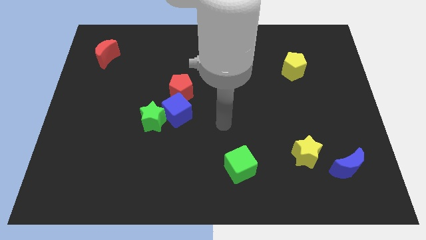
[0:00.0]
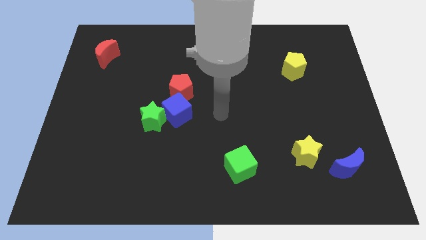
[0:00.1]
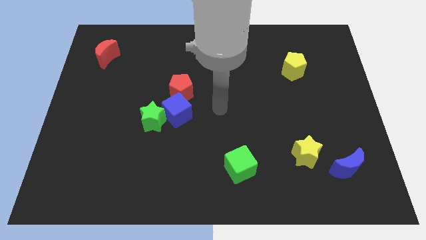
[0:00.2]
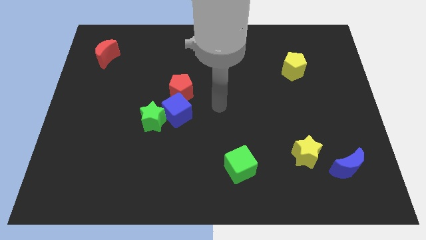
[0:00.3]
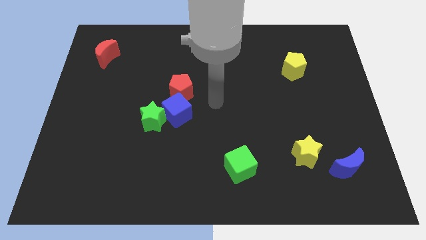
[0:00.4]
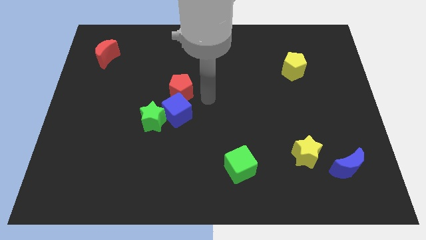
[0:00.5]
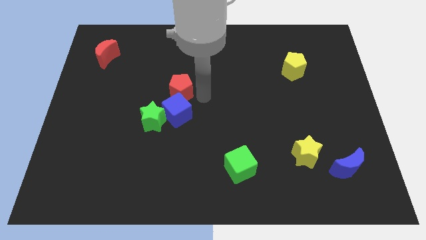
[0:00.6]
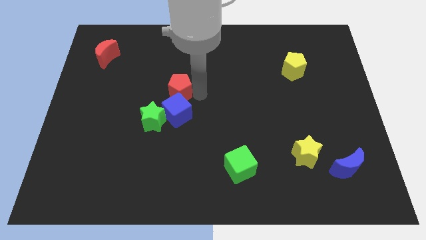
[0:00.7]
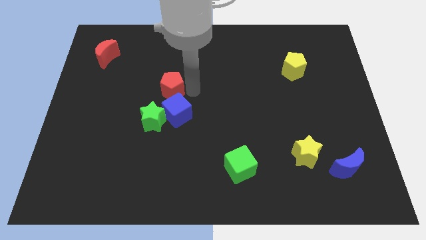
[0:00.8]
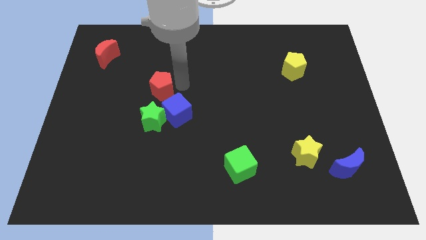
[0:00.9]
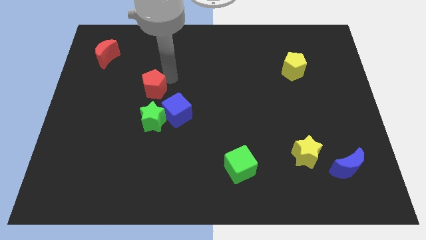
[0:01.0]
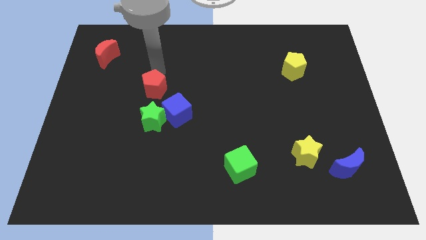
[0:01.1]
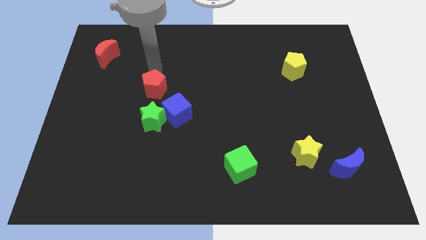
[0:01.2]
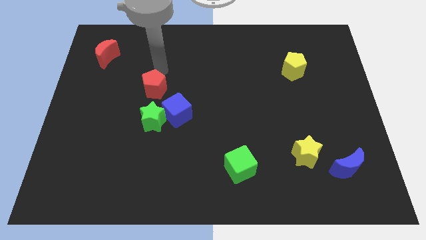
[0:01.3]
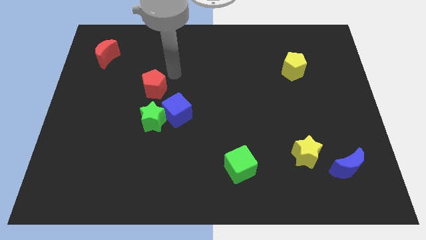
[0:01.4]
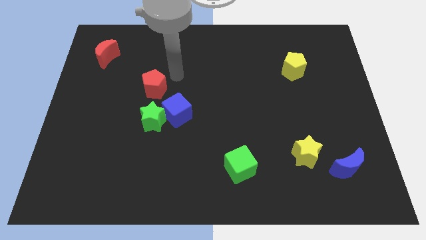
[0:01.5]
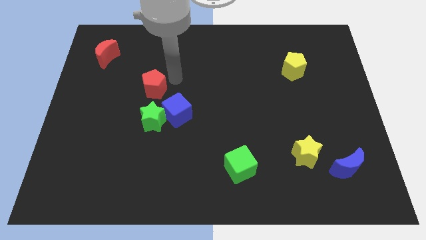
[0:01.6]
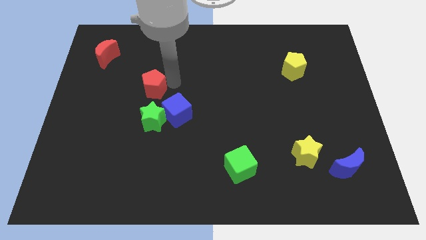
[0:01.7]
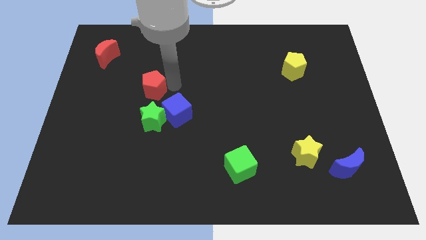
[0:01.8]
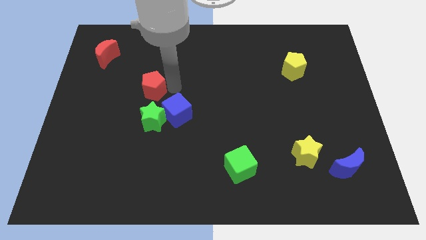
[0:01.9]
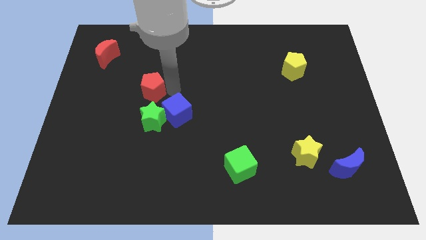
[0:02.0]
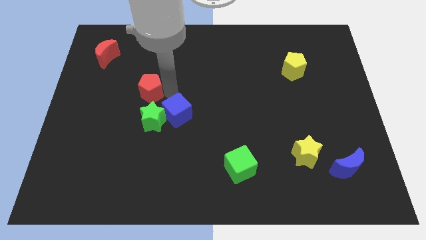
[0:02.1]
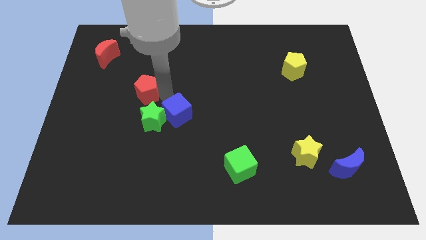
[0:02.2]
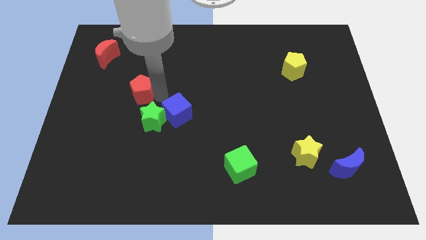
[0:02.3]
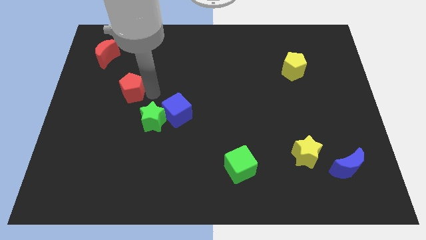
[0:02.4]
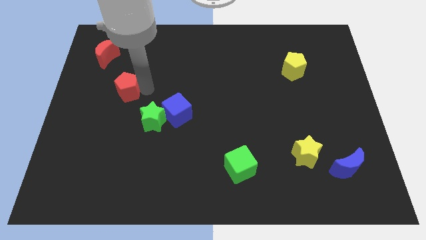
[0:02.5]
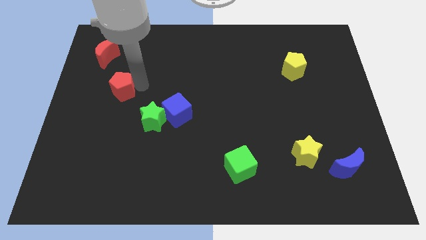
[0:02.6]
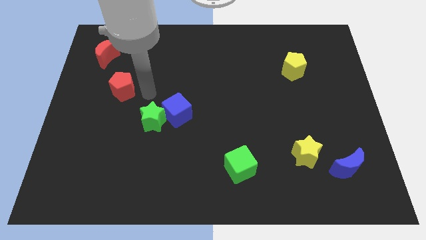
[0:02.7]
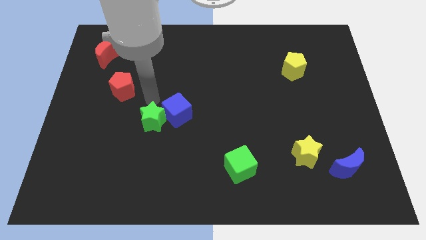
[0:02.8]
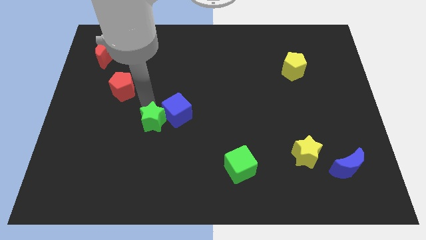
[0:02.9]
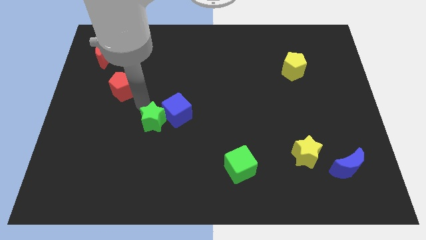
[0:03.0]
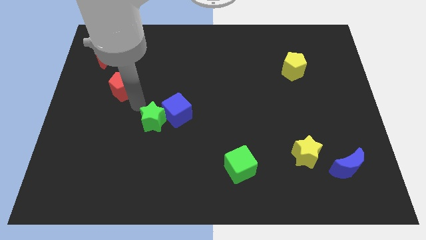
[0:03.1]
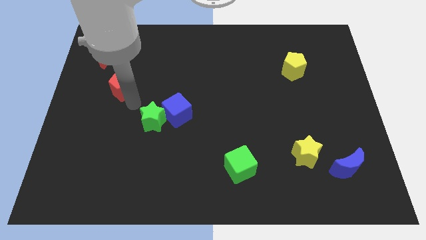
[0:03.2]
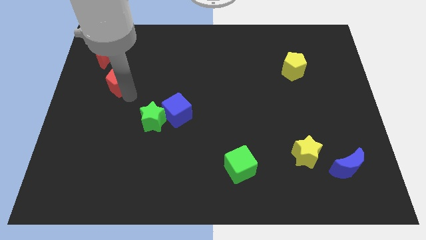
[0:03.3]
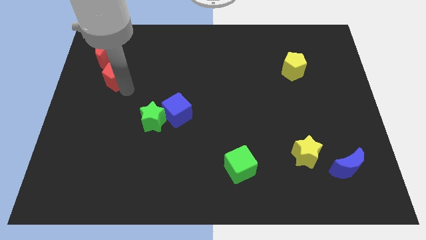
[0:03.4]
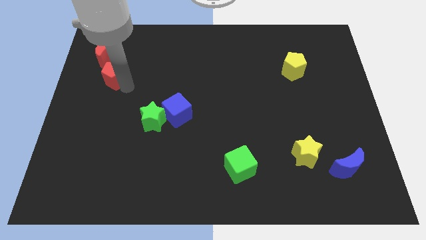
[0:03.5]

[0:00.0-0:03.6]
move red pentagon to the bottom right of the red crescent

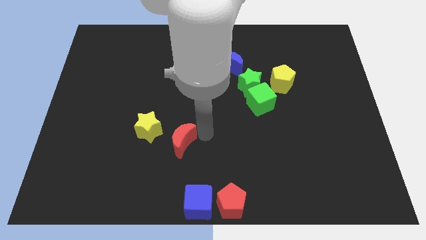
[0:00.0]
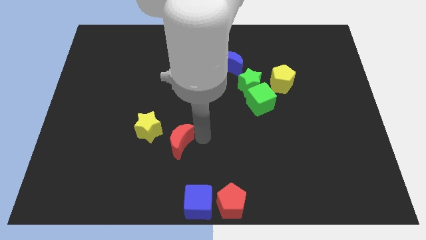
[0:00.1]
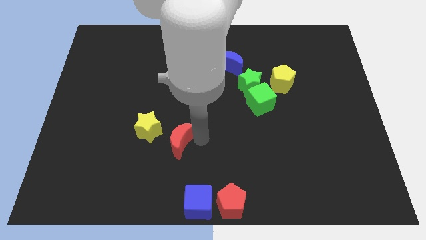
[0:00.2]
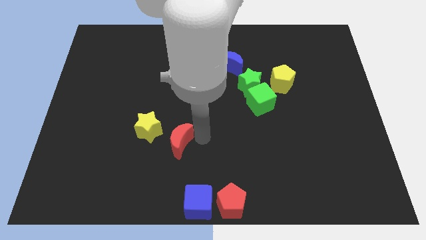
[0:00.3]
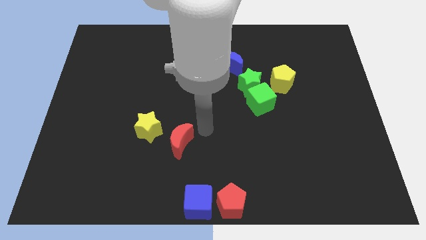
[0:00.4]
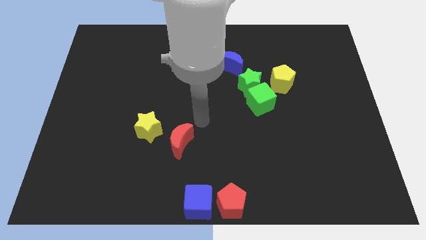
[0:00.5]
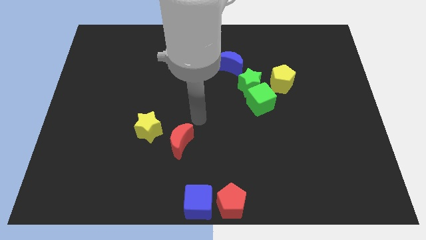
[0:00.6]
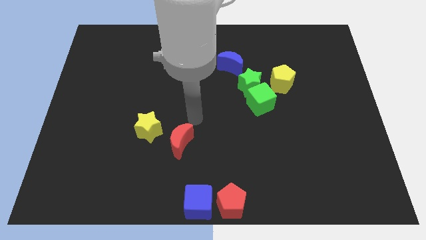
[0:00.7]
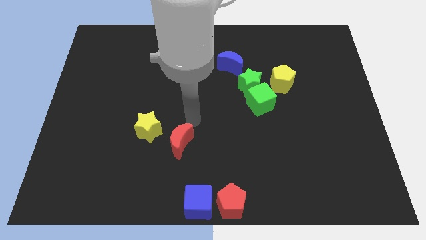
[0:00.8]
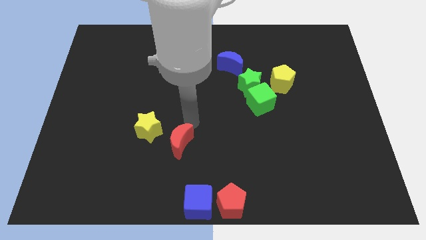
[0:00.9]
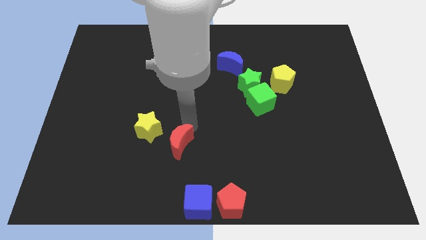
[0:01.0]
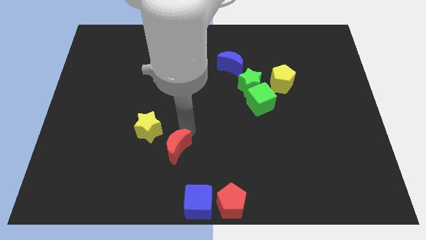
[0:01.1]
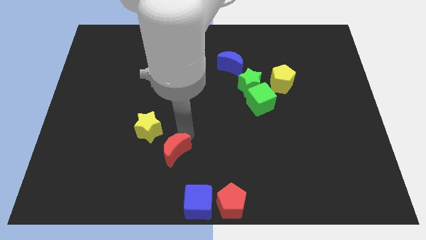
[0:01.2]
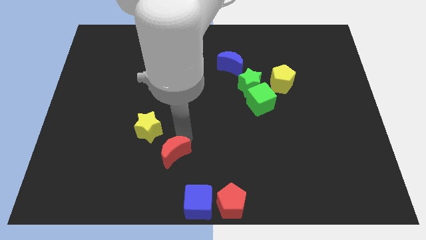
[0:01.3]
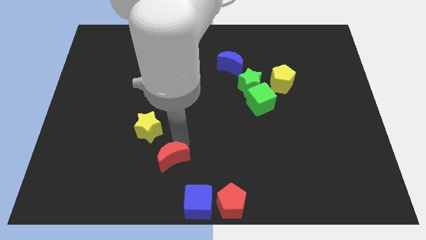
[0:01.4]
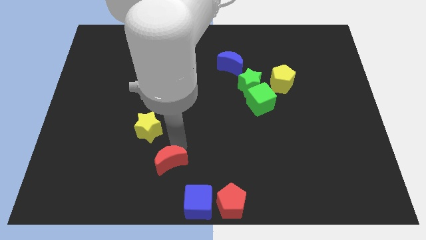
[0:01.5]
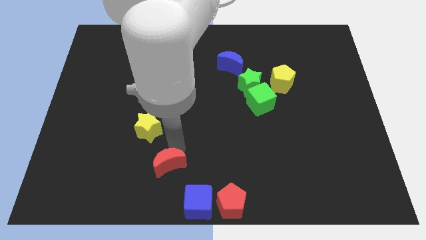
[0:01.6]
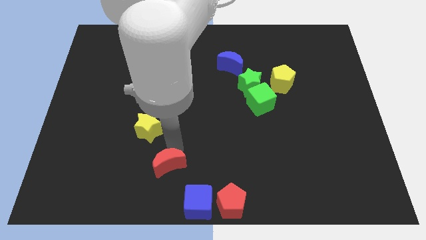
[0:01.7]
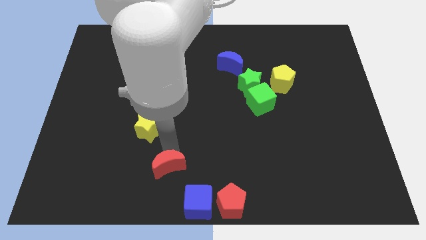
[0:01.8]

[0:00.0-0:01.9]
move the red crescent to the top left of the blue cube

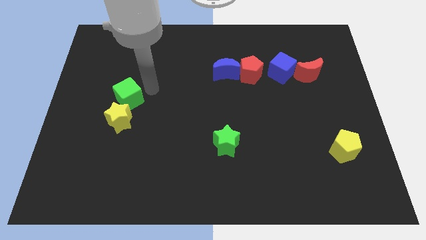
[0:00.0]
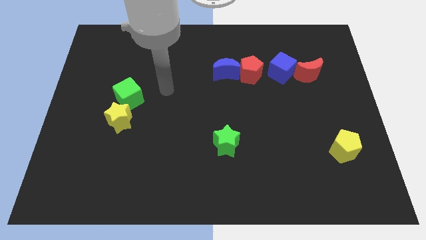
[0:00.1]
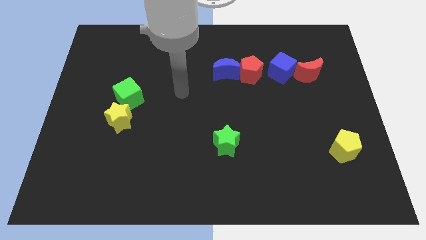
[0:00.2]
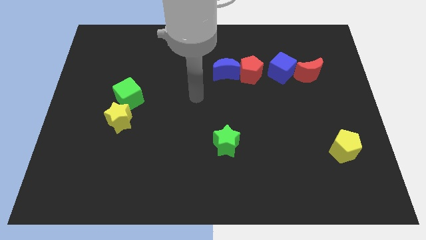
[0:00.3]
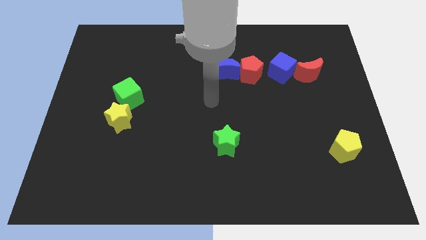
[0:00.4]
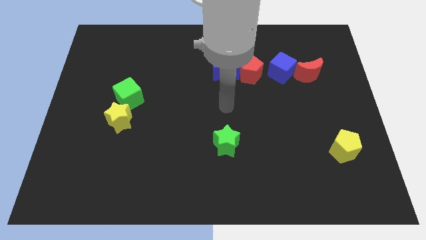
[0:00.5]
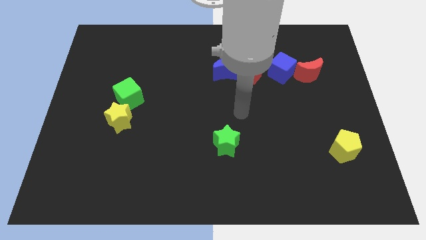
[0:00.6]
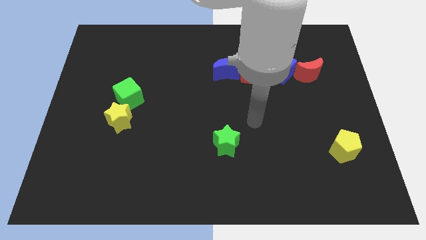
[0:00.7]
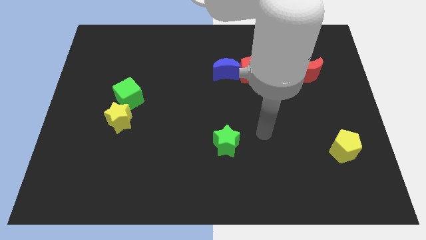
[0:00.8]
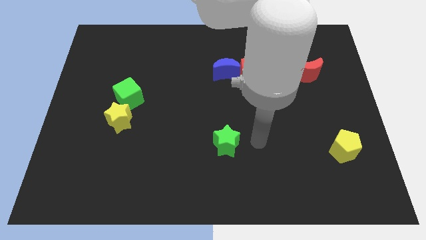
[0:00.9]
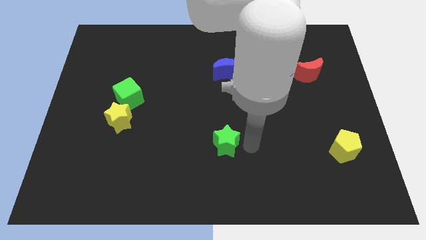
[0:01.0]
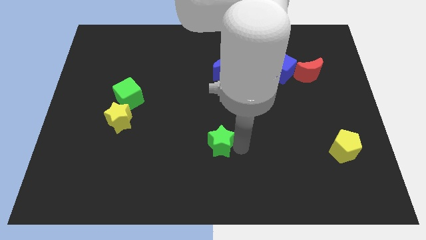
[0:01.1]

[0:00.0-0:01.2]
move your arm towards green star

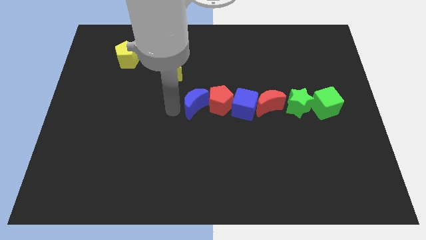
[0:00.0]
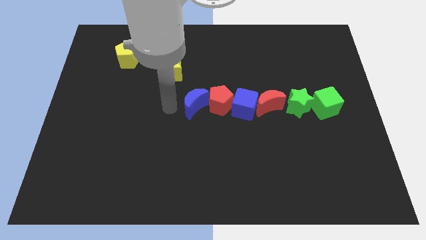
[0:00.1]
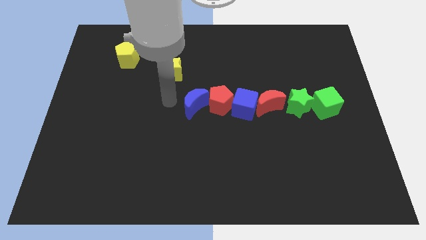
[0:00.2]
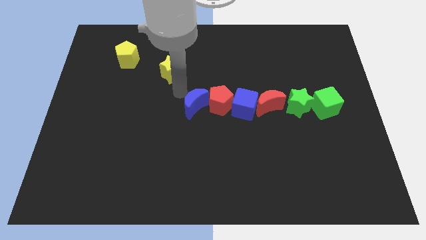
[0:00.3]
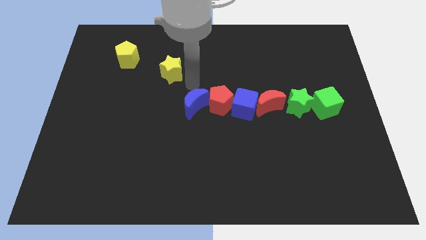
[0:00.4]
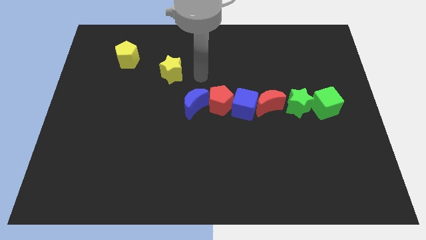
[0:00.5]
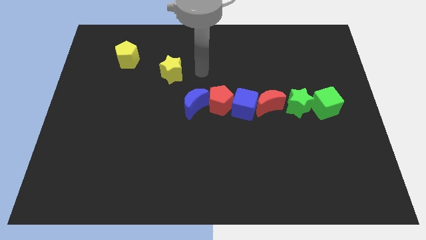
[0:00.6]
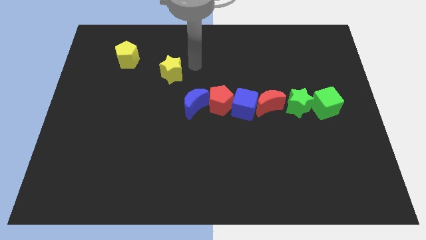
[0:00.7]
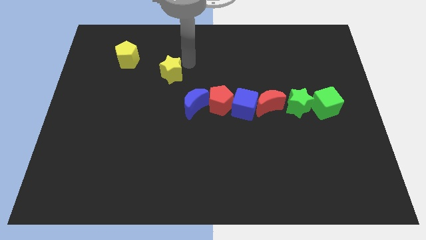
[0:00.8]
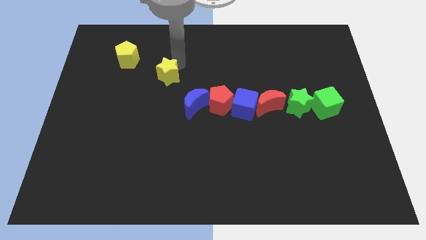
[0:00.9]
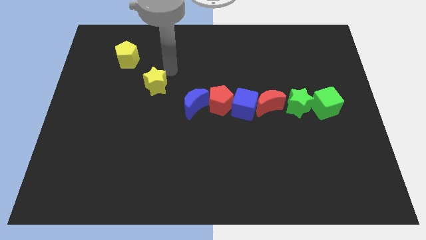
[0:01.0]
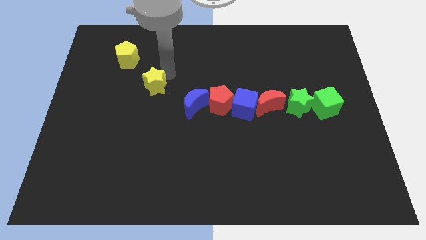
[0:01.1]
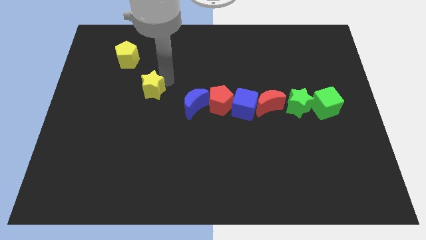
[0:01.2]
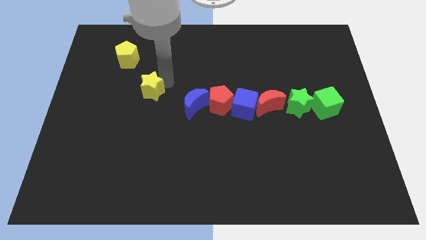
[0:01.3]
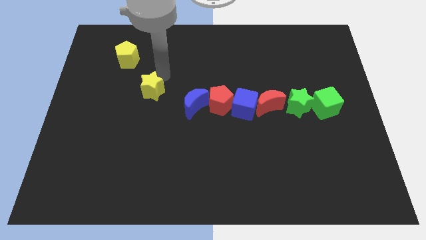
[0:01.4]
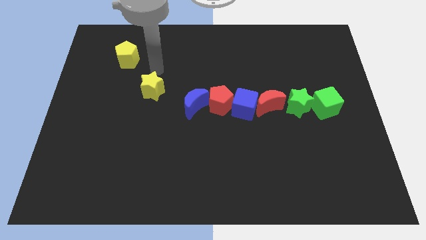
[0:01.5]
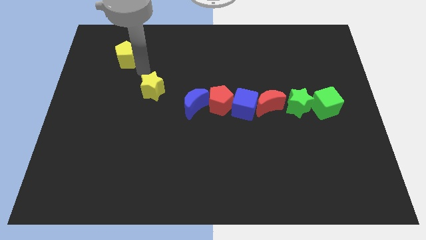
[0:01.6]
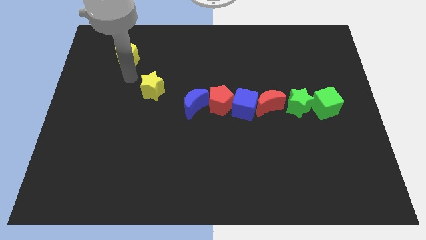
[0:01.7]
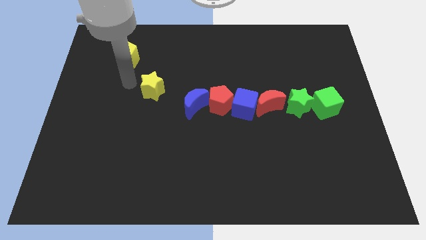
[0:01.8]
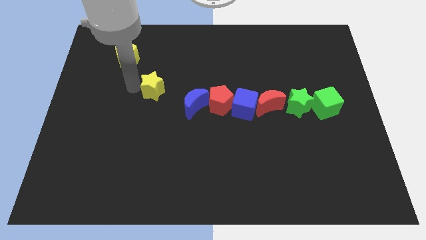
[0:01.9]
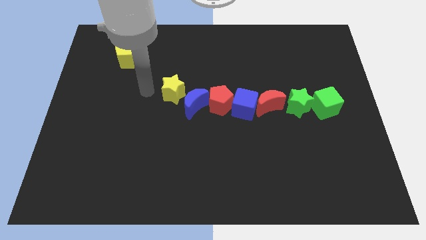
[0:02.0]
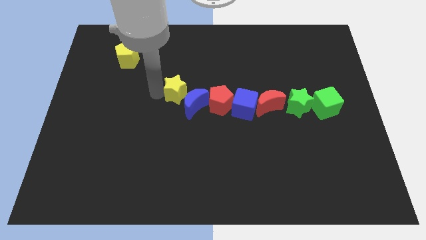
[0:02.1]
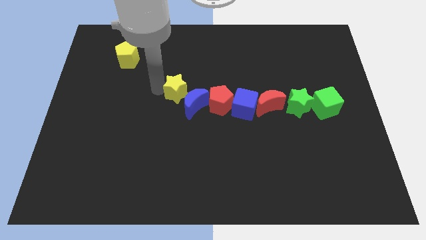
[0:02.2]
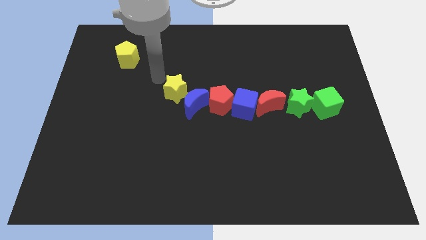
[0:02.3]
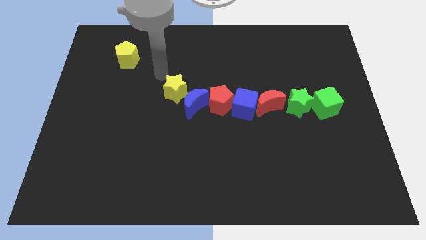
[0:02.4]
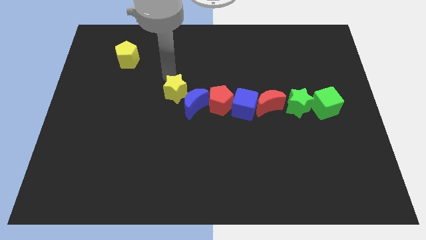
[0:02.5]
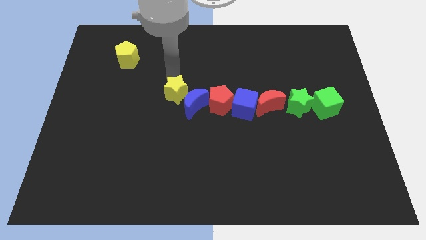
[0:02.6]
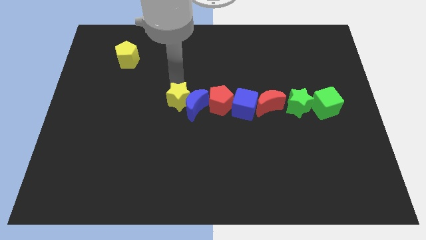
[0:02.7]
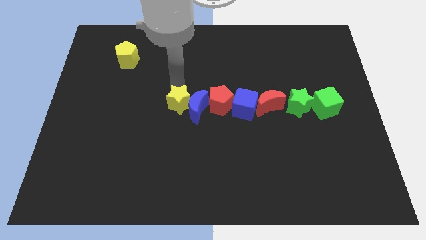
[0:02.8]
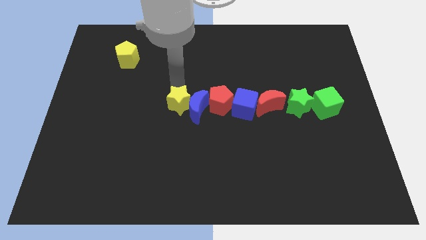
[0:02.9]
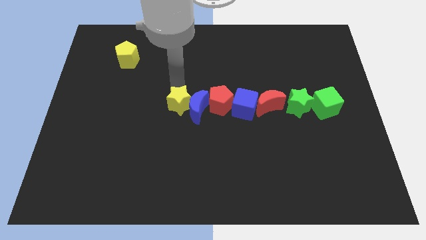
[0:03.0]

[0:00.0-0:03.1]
move the yellow star into blue crescent
